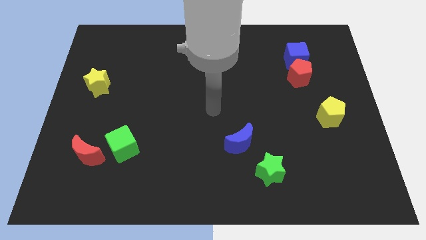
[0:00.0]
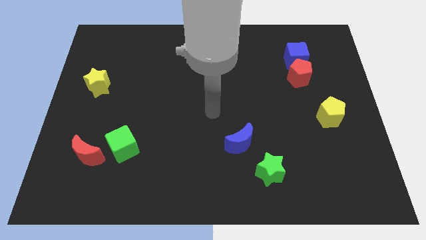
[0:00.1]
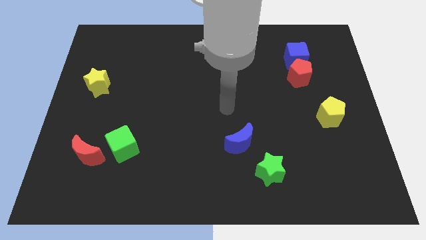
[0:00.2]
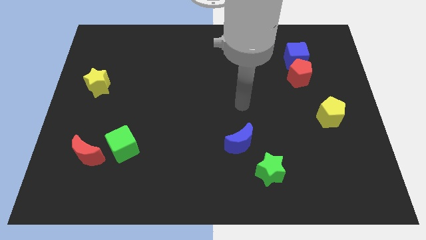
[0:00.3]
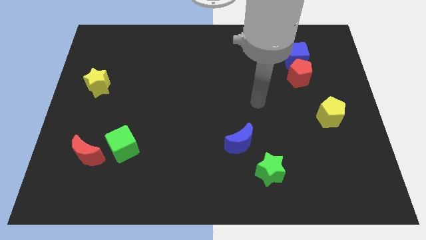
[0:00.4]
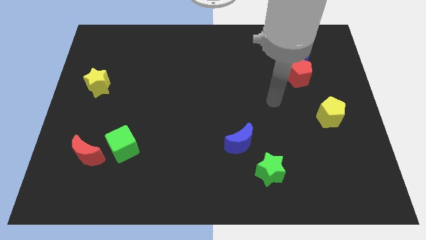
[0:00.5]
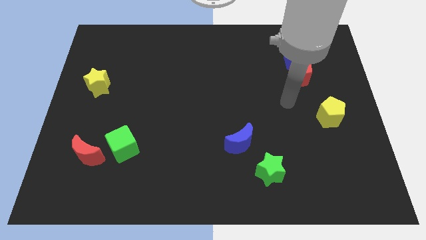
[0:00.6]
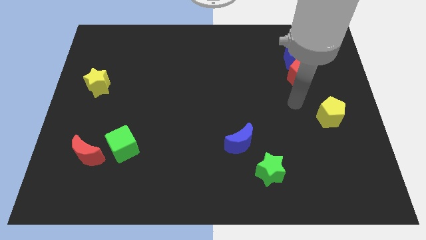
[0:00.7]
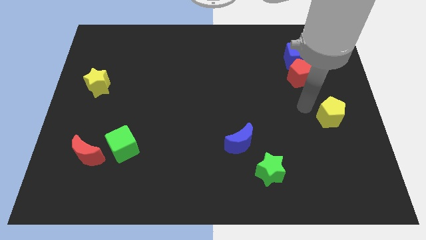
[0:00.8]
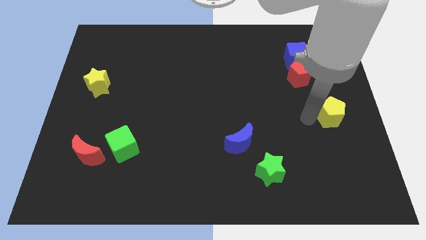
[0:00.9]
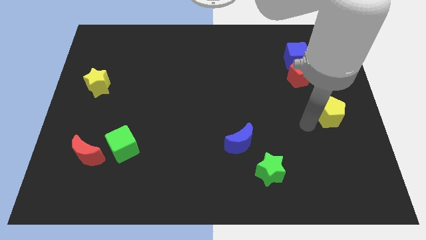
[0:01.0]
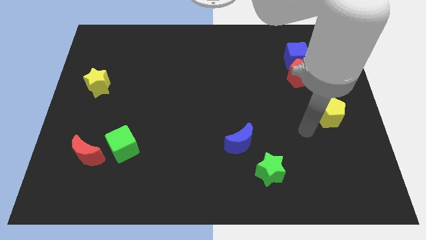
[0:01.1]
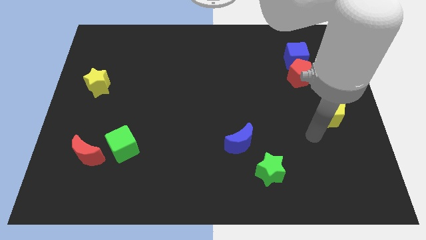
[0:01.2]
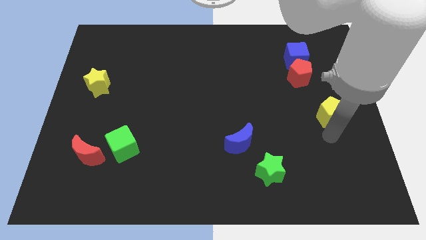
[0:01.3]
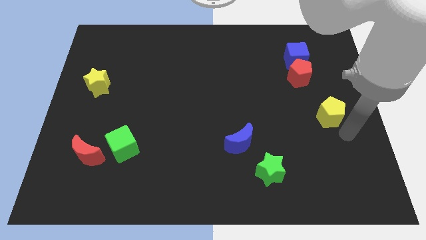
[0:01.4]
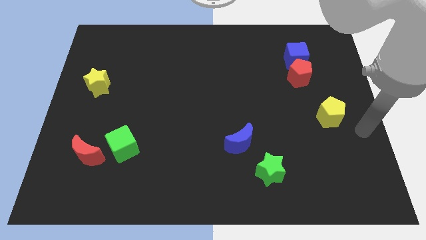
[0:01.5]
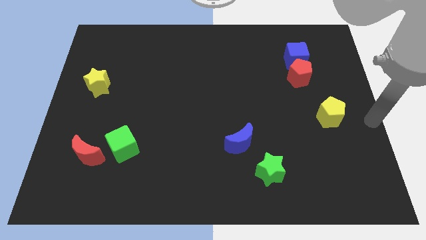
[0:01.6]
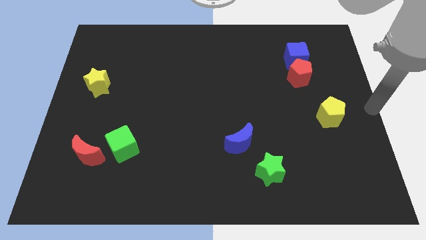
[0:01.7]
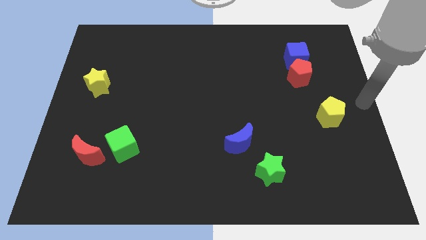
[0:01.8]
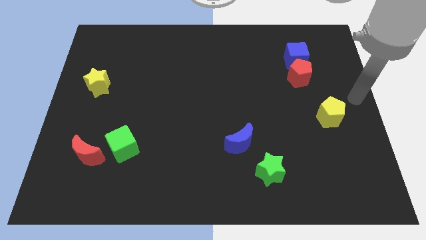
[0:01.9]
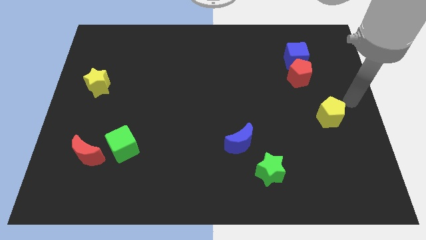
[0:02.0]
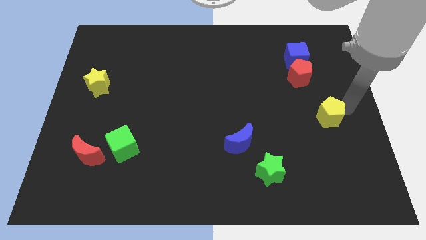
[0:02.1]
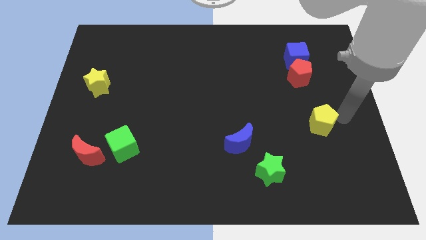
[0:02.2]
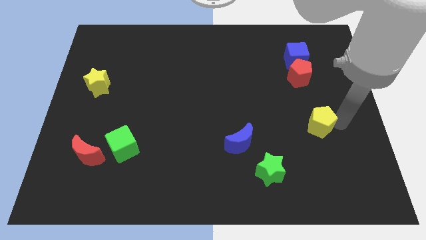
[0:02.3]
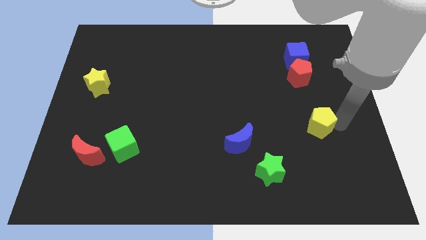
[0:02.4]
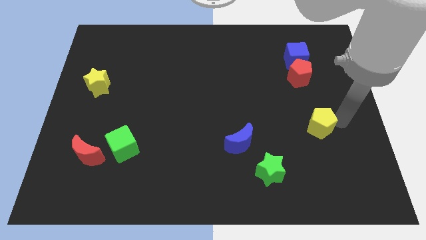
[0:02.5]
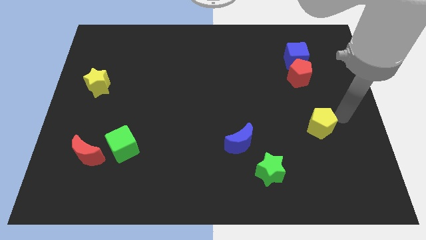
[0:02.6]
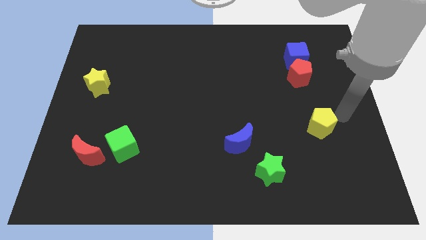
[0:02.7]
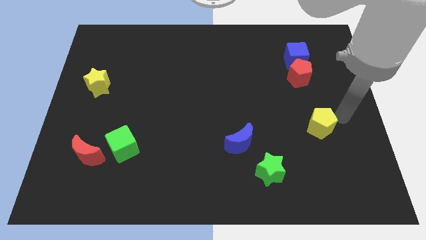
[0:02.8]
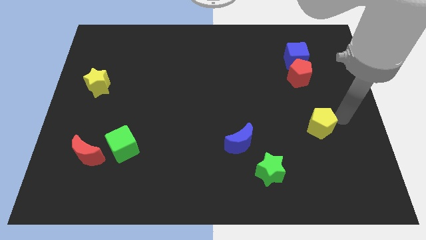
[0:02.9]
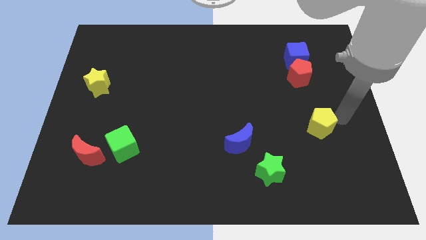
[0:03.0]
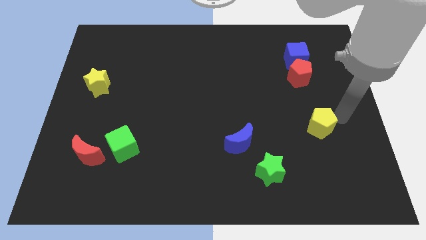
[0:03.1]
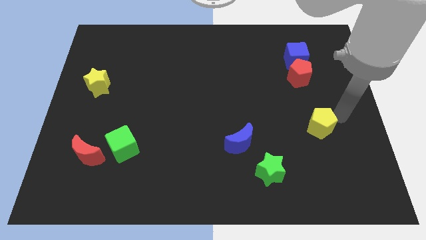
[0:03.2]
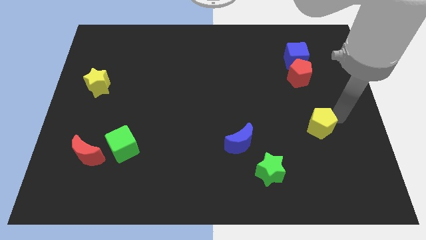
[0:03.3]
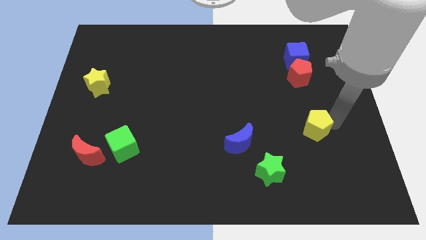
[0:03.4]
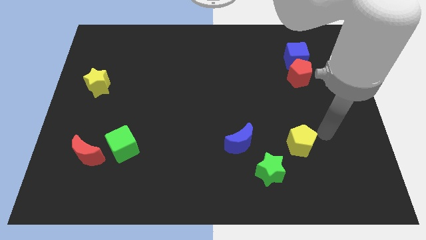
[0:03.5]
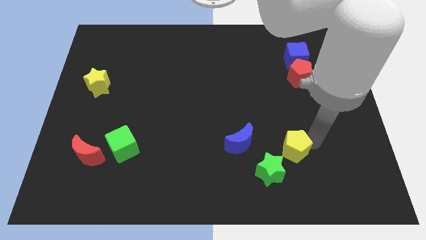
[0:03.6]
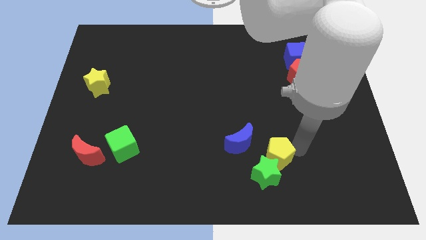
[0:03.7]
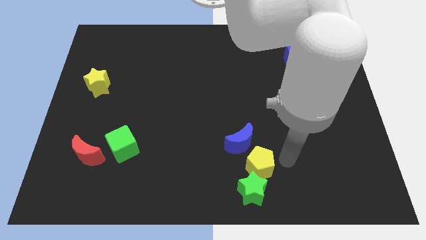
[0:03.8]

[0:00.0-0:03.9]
push the yellow pentagon into the green star

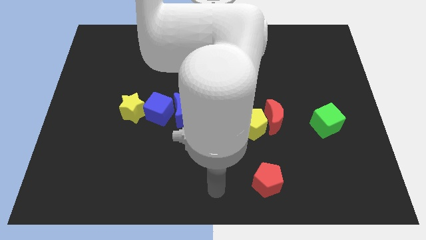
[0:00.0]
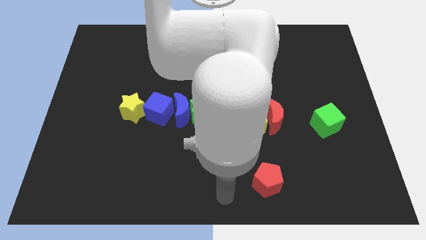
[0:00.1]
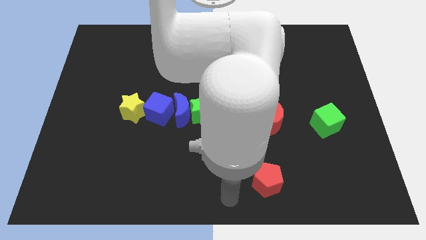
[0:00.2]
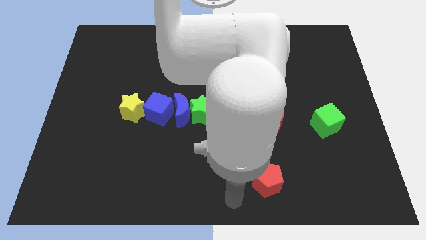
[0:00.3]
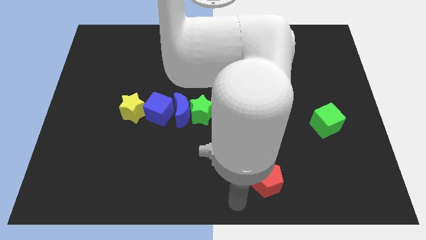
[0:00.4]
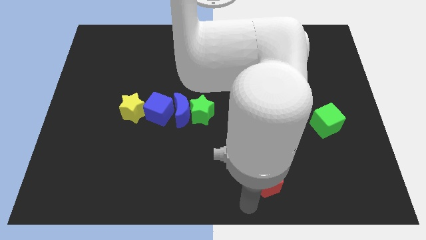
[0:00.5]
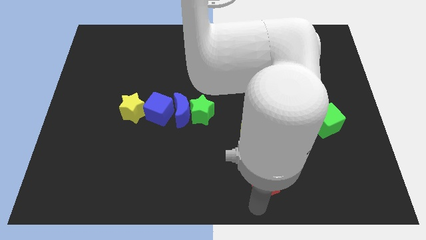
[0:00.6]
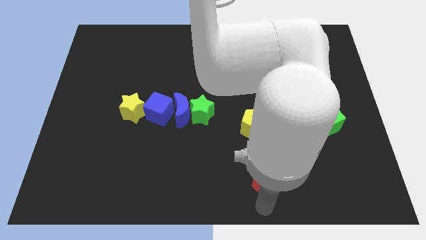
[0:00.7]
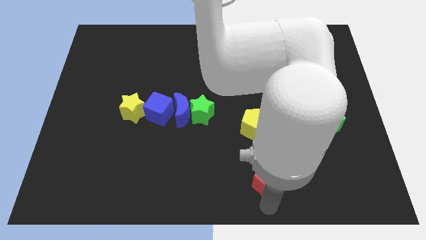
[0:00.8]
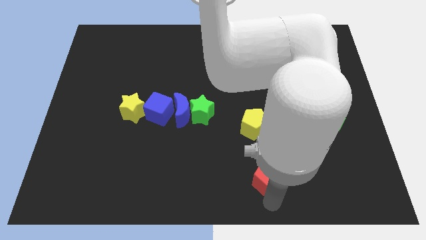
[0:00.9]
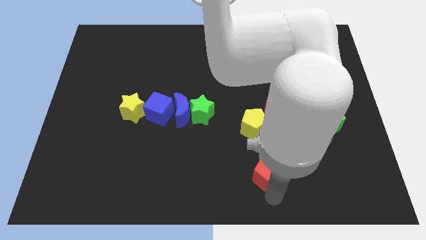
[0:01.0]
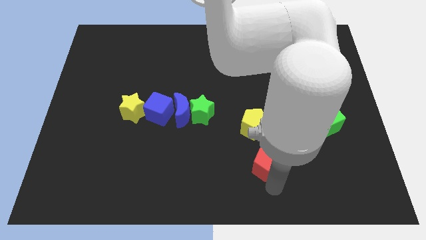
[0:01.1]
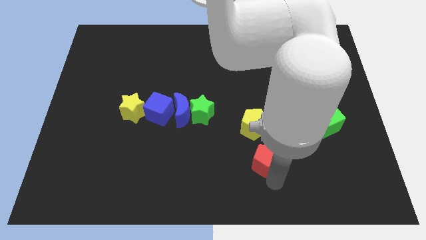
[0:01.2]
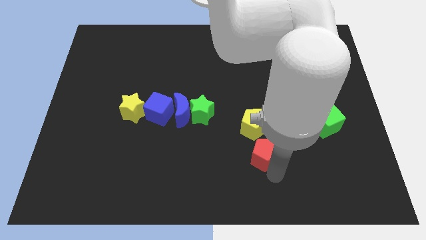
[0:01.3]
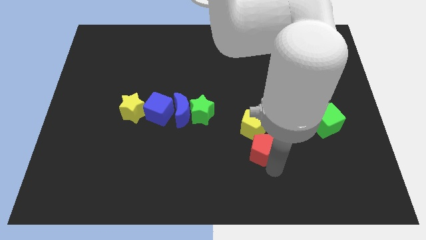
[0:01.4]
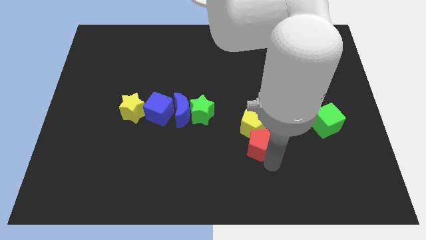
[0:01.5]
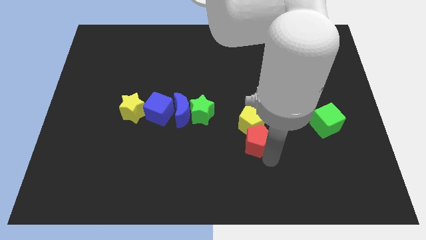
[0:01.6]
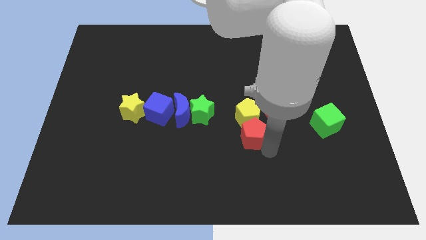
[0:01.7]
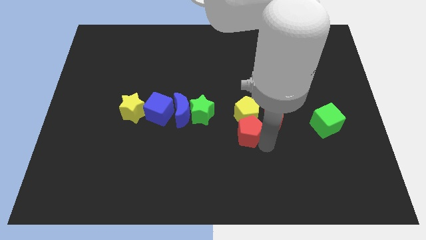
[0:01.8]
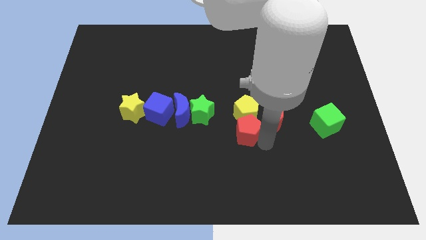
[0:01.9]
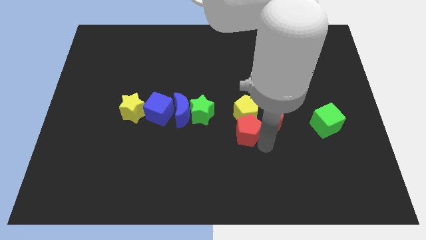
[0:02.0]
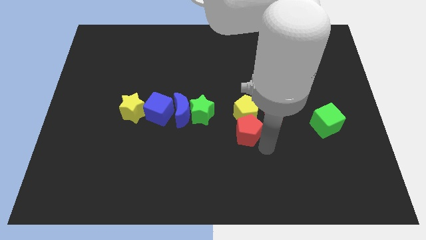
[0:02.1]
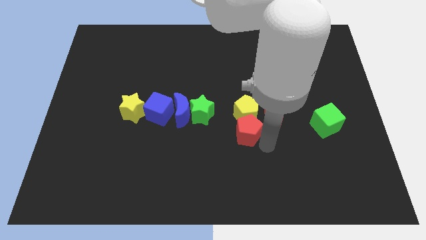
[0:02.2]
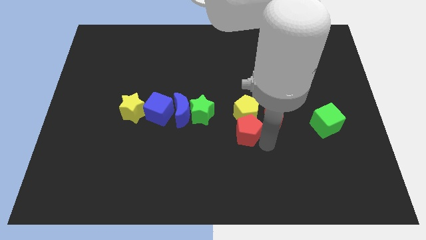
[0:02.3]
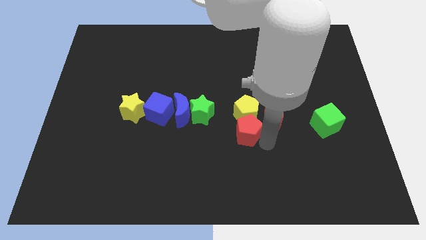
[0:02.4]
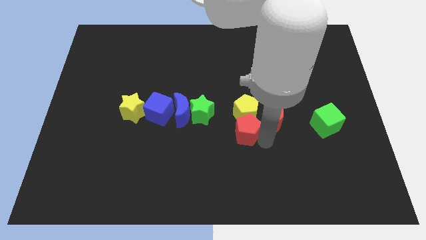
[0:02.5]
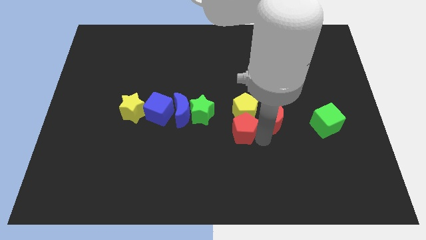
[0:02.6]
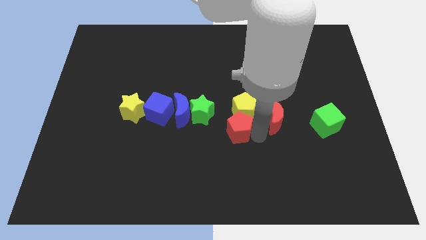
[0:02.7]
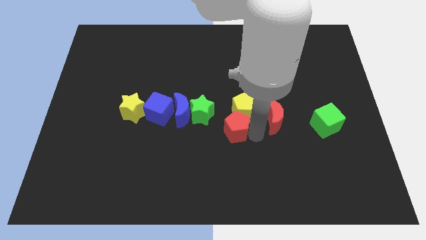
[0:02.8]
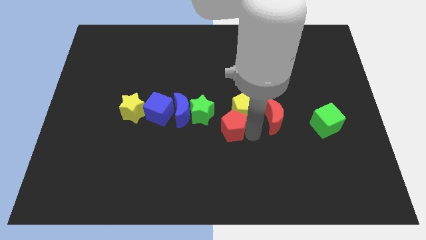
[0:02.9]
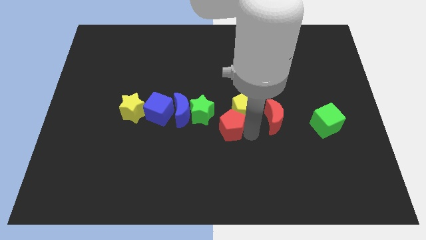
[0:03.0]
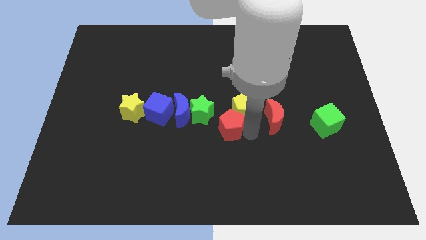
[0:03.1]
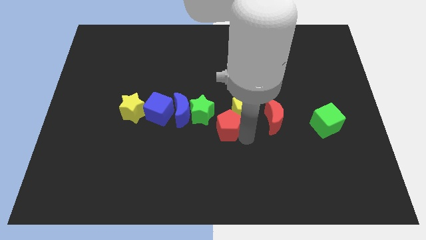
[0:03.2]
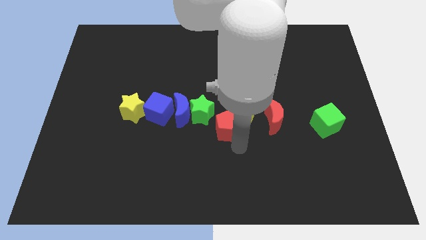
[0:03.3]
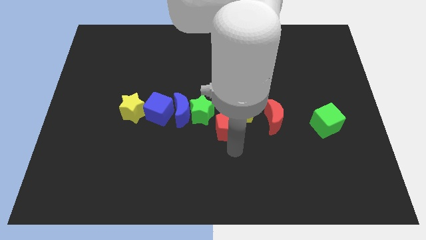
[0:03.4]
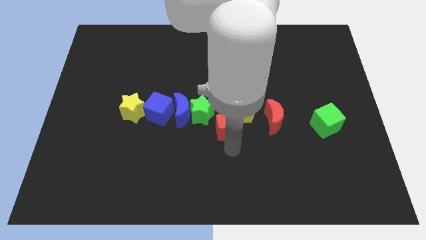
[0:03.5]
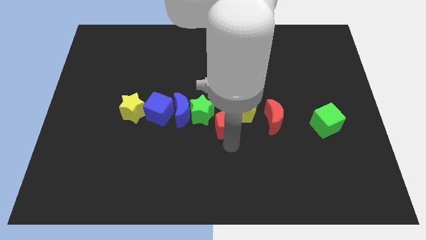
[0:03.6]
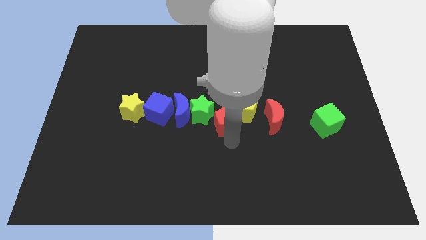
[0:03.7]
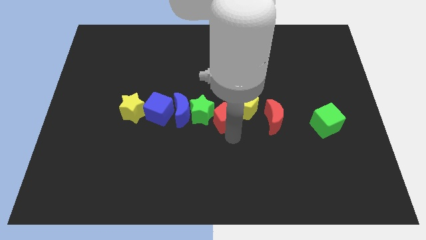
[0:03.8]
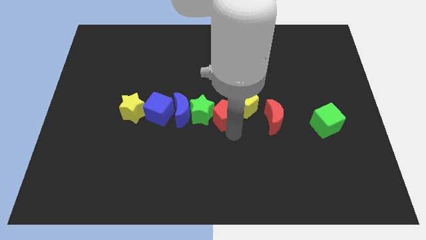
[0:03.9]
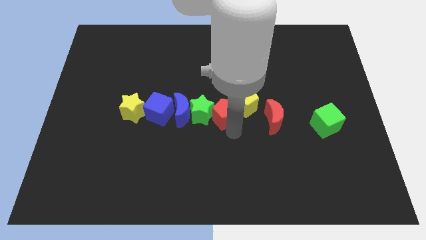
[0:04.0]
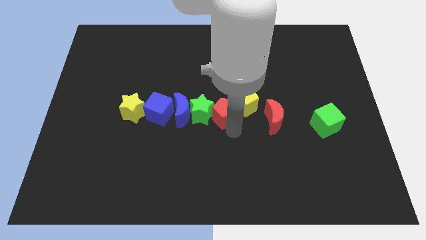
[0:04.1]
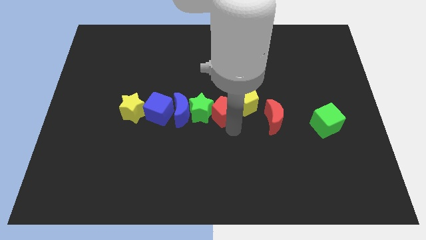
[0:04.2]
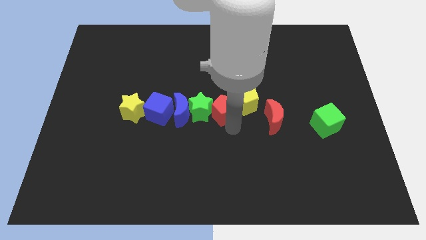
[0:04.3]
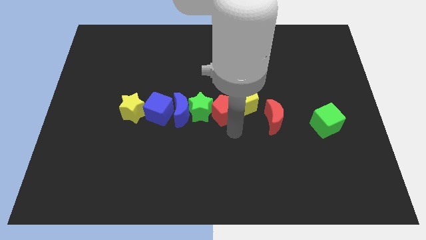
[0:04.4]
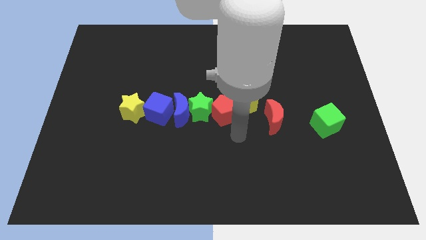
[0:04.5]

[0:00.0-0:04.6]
move the red pentagon to the center of the board

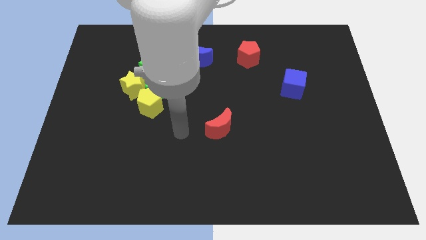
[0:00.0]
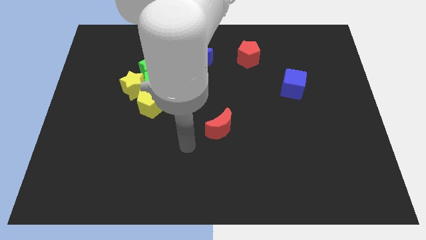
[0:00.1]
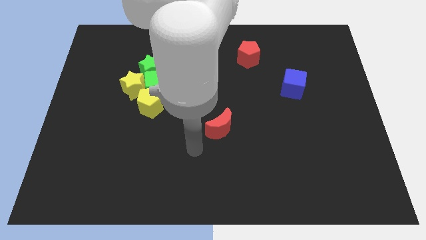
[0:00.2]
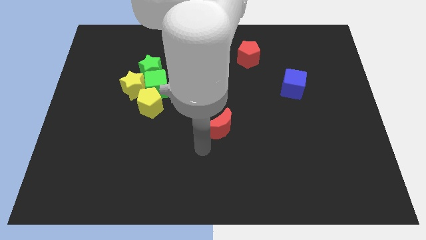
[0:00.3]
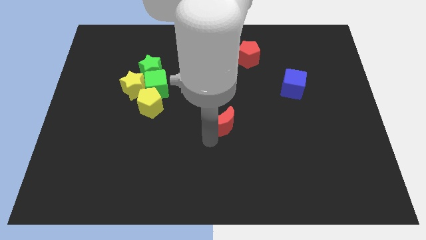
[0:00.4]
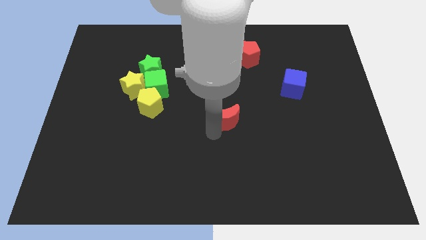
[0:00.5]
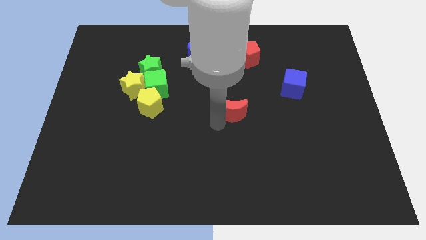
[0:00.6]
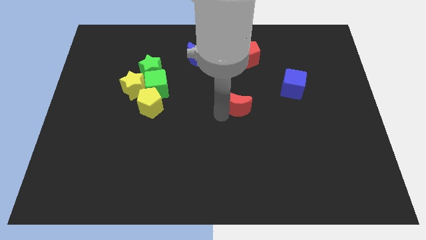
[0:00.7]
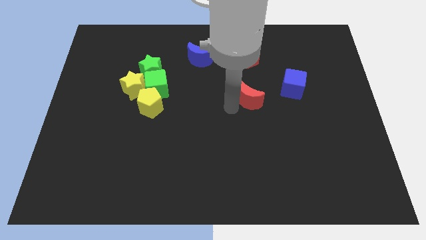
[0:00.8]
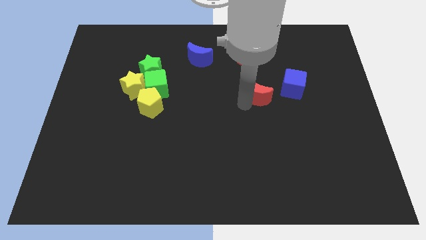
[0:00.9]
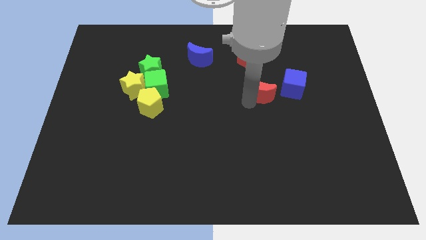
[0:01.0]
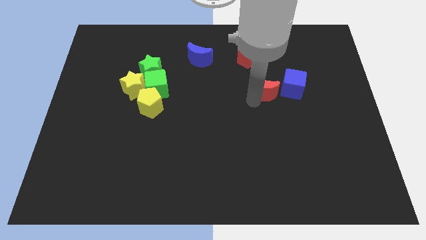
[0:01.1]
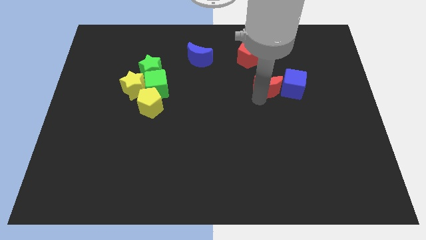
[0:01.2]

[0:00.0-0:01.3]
place red moon to the left of blue cube
